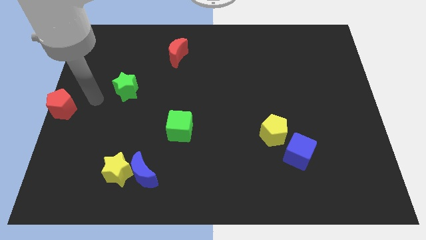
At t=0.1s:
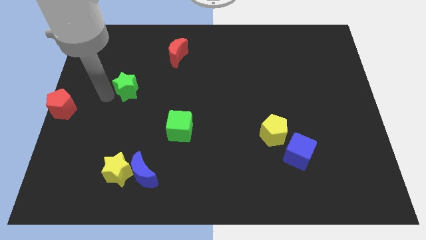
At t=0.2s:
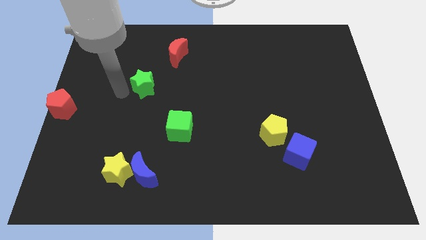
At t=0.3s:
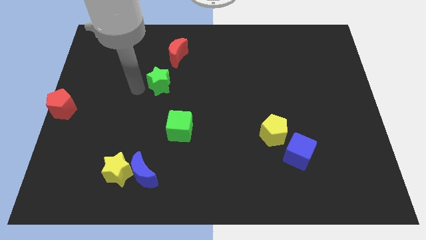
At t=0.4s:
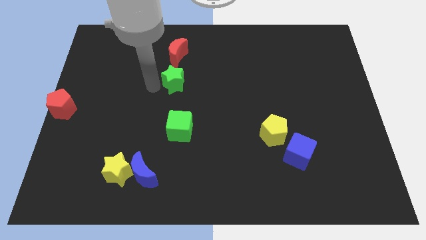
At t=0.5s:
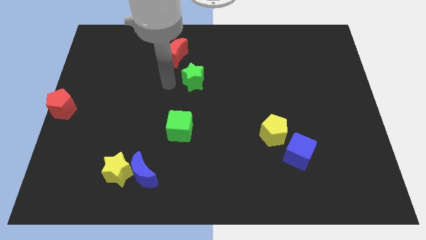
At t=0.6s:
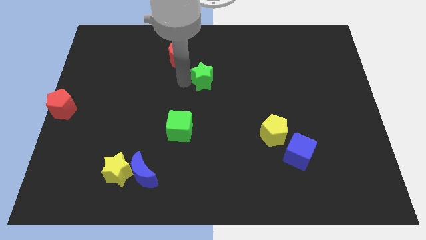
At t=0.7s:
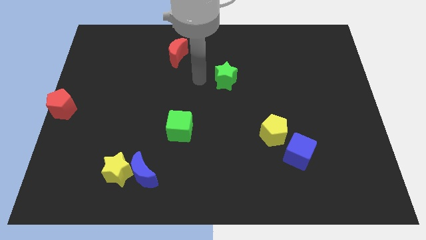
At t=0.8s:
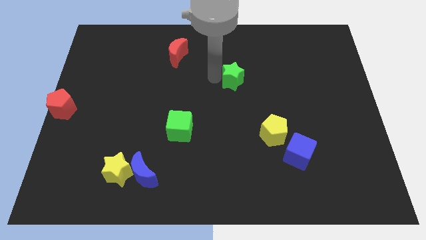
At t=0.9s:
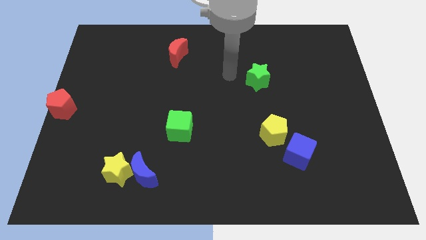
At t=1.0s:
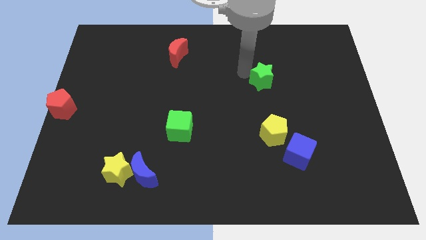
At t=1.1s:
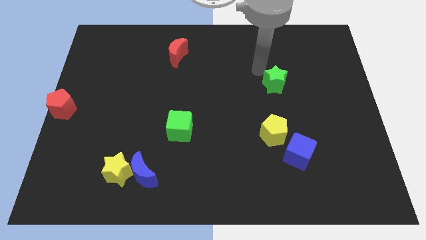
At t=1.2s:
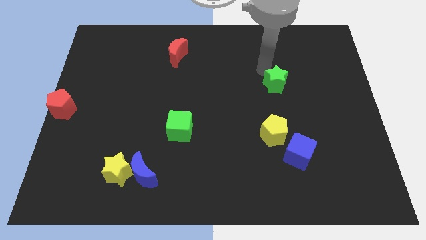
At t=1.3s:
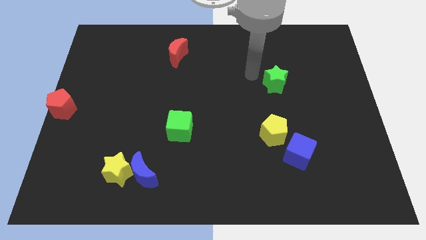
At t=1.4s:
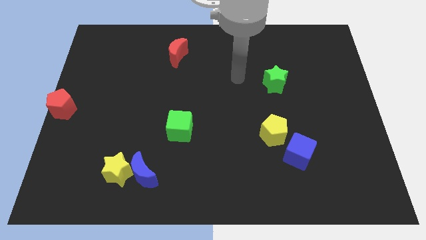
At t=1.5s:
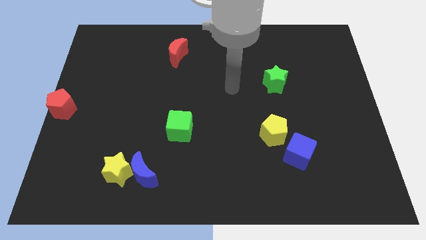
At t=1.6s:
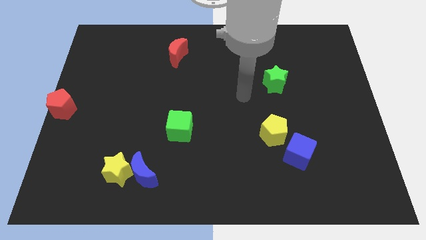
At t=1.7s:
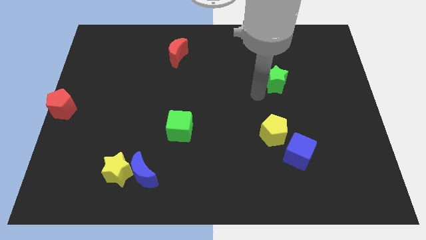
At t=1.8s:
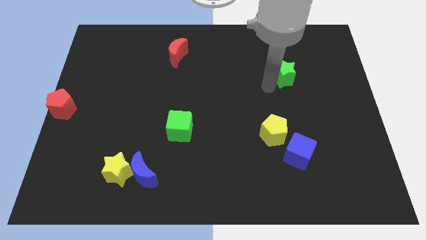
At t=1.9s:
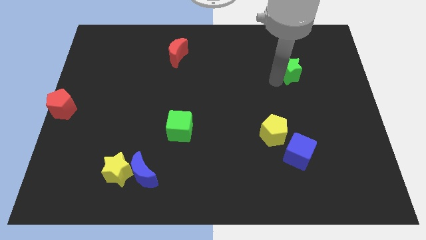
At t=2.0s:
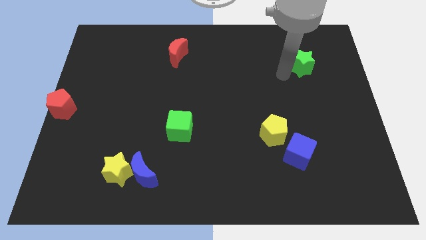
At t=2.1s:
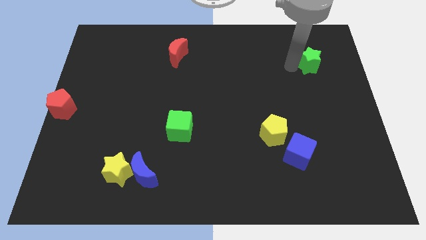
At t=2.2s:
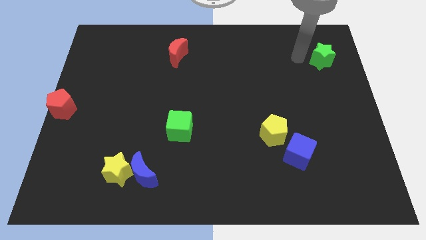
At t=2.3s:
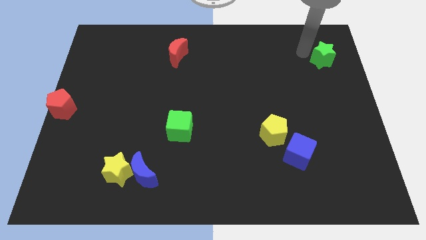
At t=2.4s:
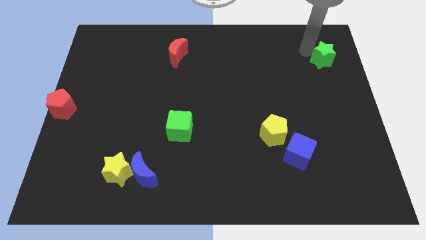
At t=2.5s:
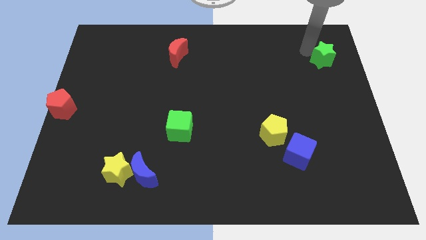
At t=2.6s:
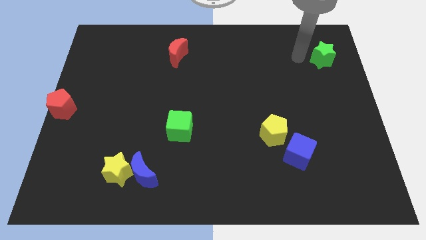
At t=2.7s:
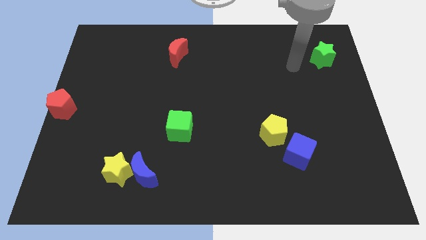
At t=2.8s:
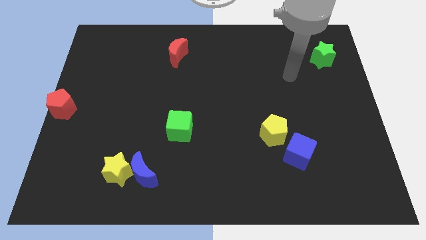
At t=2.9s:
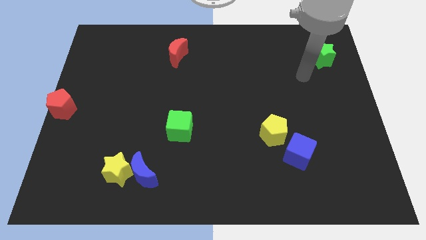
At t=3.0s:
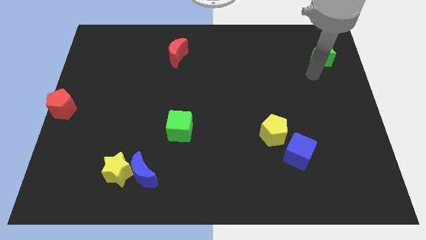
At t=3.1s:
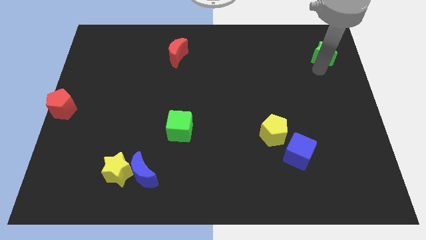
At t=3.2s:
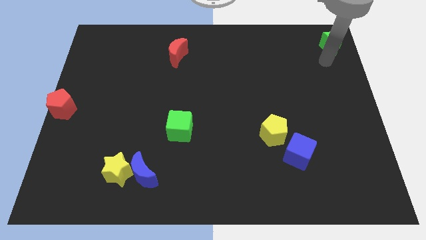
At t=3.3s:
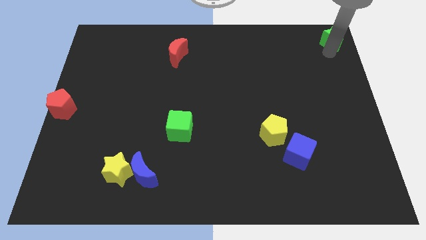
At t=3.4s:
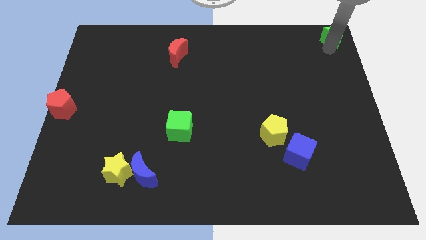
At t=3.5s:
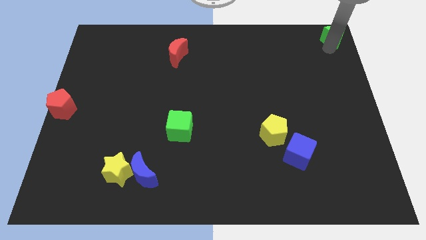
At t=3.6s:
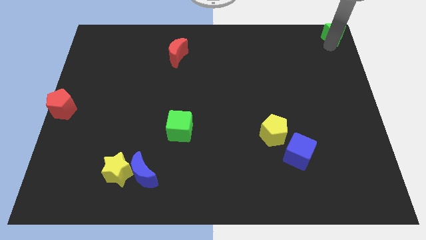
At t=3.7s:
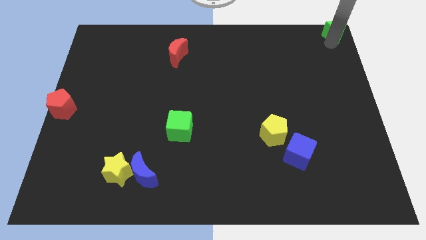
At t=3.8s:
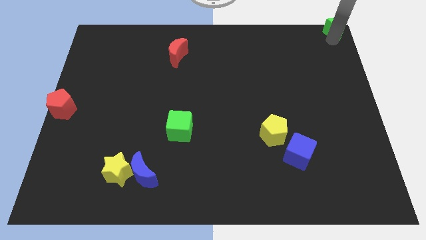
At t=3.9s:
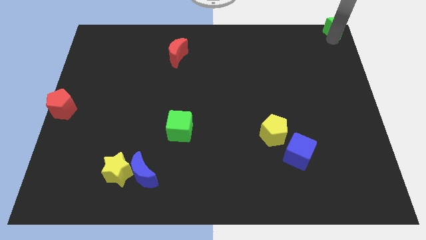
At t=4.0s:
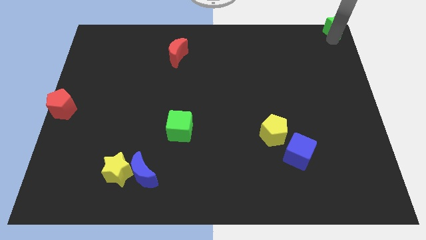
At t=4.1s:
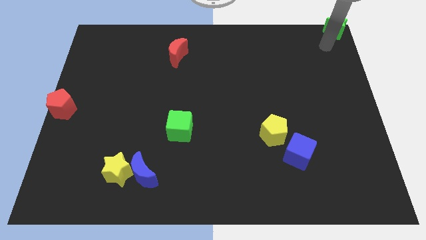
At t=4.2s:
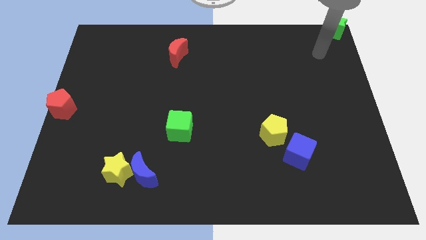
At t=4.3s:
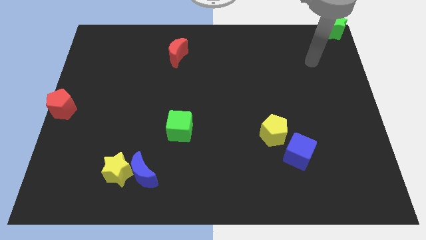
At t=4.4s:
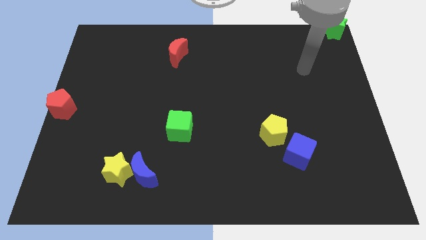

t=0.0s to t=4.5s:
place the green star at the top right corner of the board

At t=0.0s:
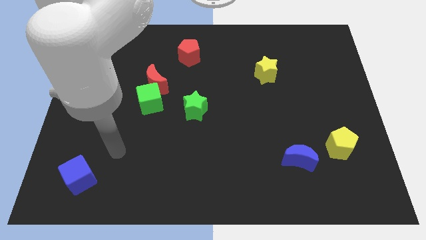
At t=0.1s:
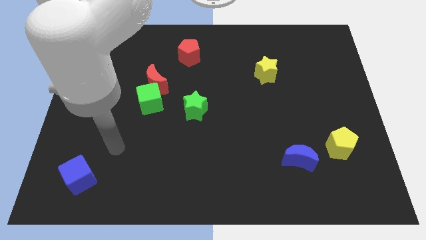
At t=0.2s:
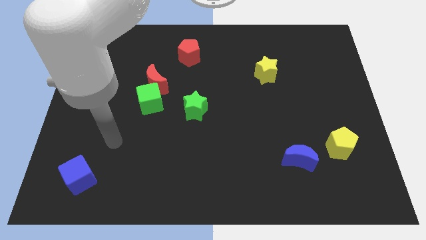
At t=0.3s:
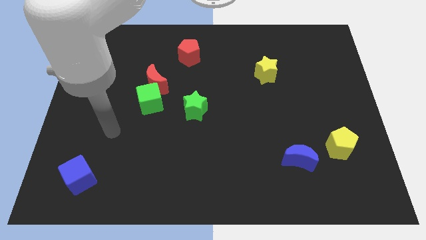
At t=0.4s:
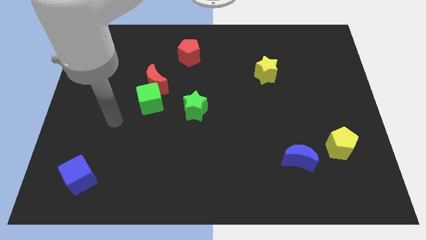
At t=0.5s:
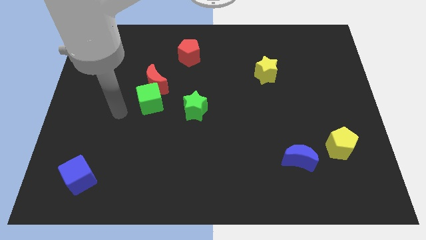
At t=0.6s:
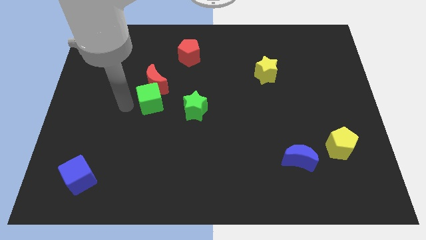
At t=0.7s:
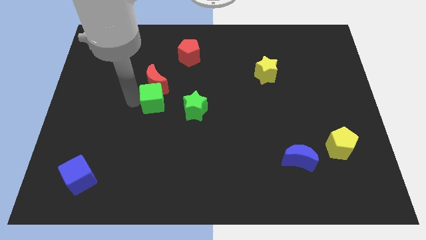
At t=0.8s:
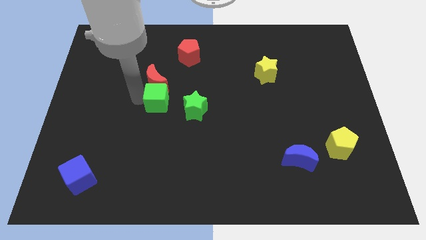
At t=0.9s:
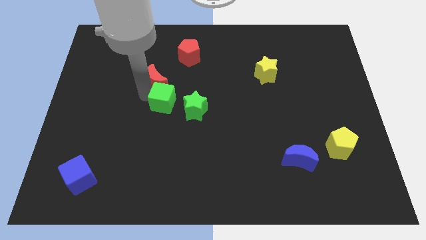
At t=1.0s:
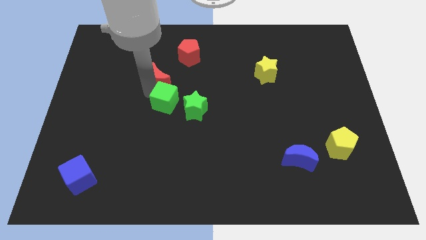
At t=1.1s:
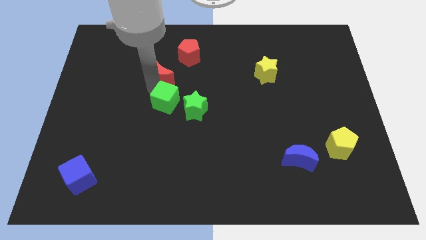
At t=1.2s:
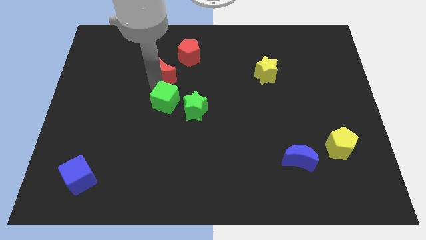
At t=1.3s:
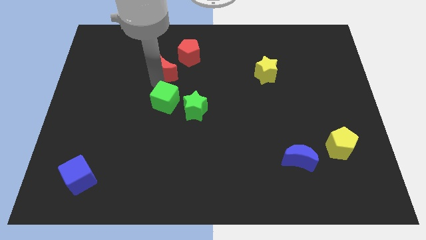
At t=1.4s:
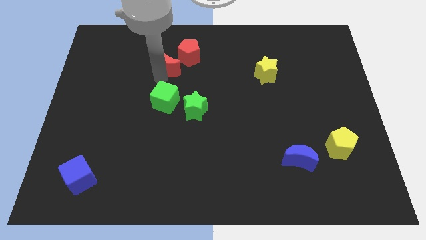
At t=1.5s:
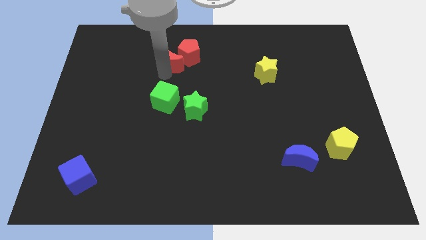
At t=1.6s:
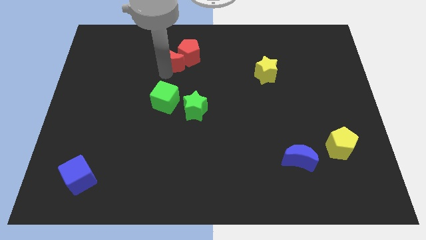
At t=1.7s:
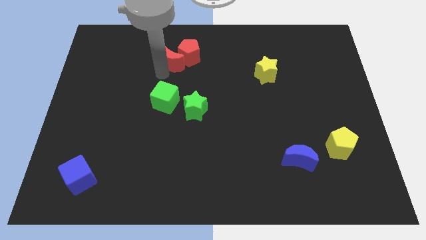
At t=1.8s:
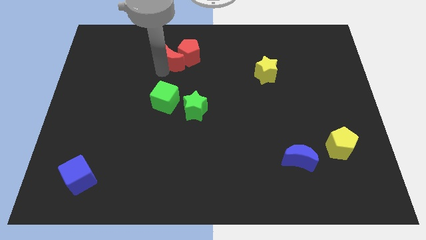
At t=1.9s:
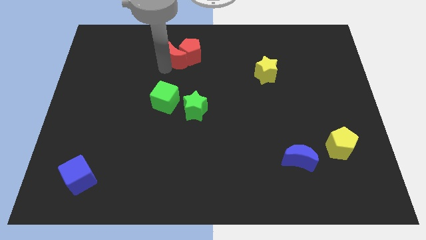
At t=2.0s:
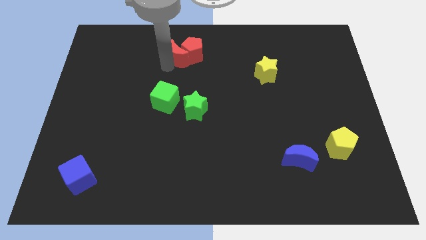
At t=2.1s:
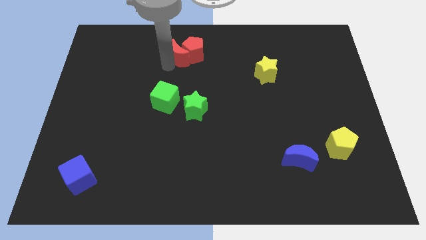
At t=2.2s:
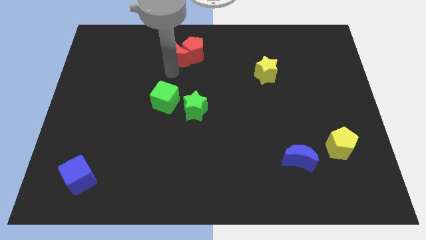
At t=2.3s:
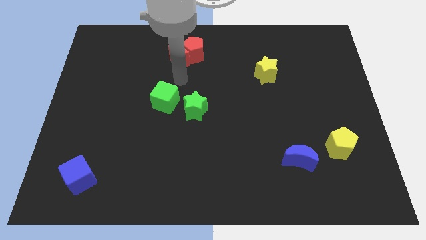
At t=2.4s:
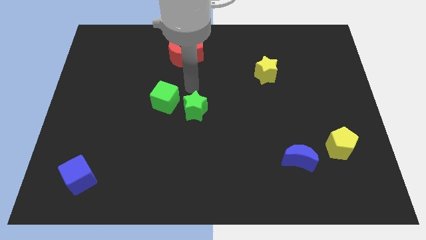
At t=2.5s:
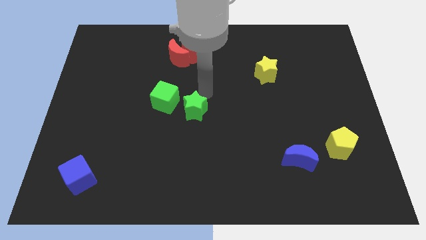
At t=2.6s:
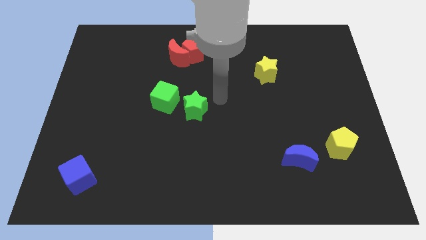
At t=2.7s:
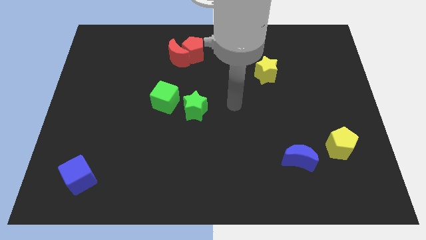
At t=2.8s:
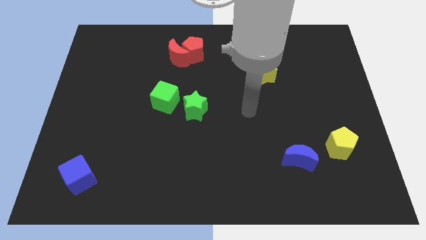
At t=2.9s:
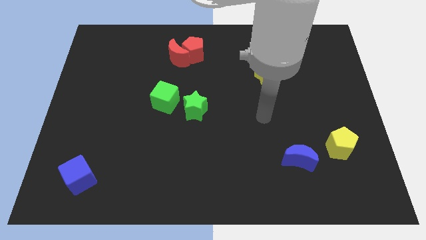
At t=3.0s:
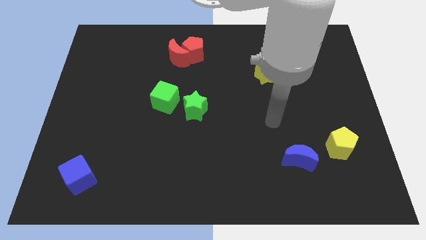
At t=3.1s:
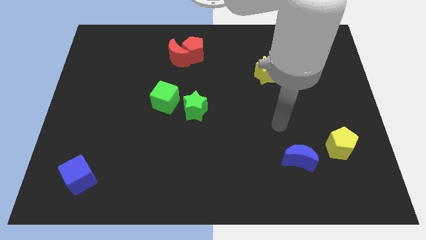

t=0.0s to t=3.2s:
move the red crescent into the red pentagon

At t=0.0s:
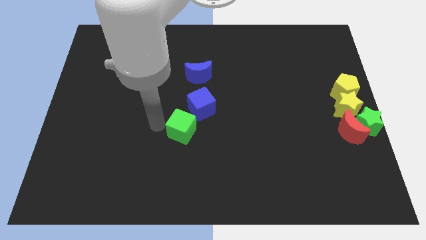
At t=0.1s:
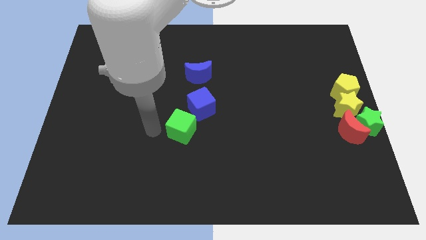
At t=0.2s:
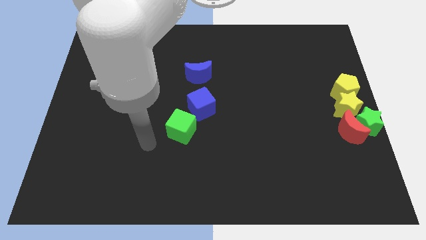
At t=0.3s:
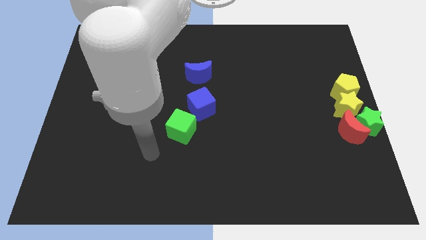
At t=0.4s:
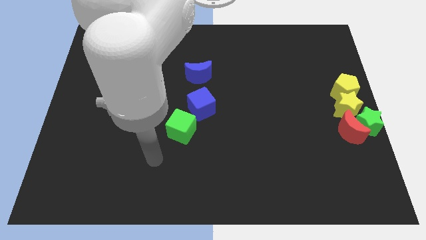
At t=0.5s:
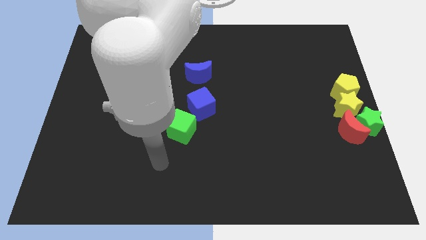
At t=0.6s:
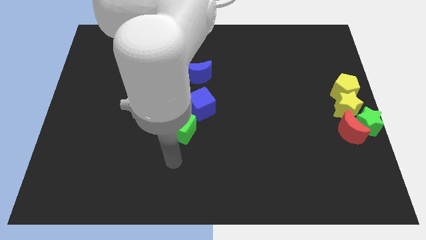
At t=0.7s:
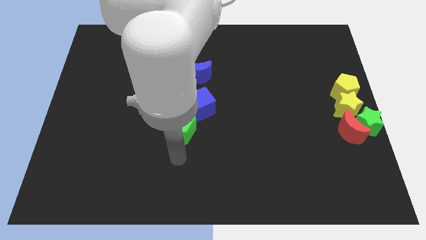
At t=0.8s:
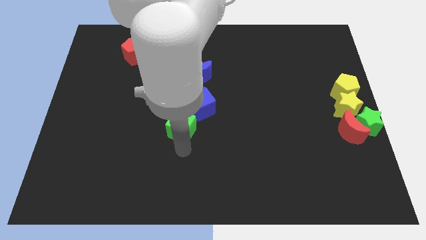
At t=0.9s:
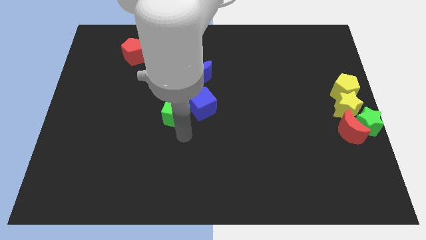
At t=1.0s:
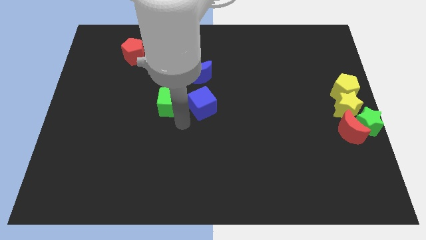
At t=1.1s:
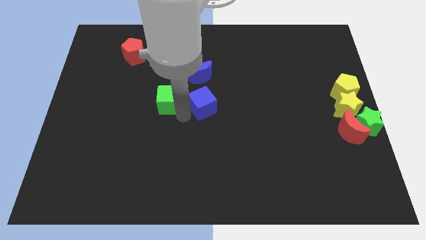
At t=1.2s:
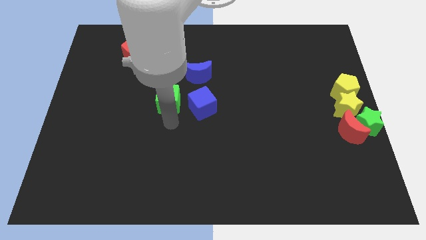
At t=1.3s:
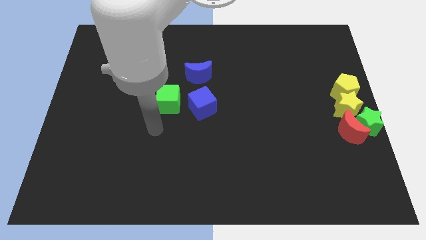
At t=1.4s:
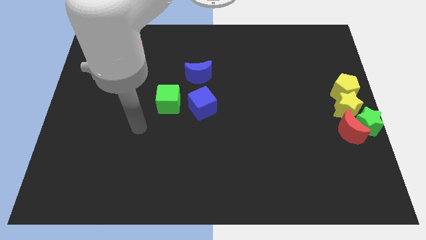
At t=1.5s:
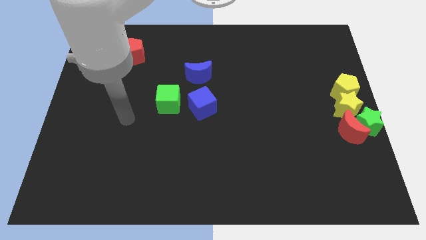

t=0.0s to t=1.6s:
push the green cube to the left of the blue cube
